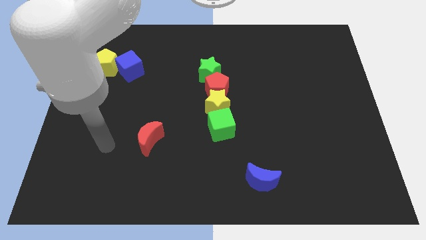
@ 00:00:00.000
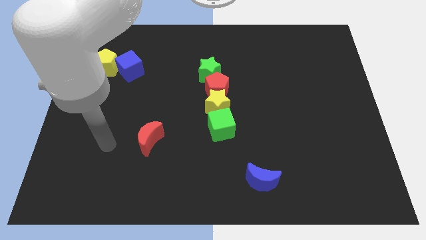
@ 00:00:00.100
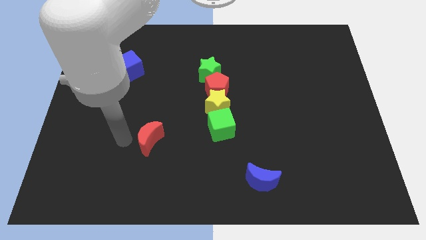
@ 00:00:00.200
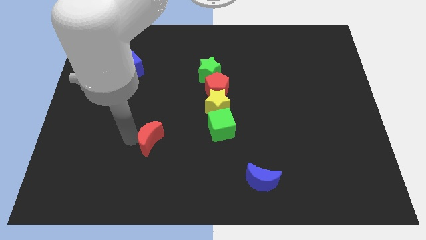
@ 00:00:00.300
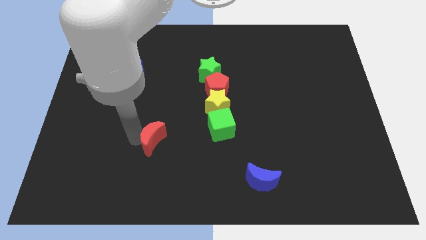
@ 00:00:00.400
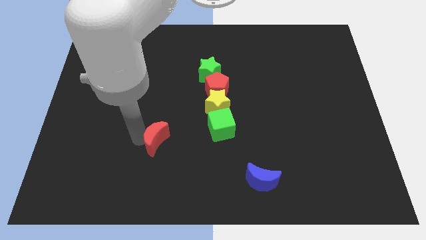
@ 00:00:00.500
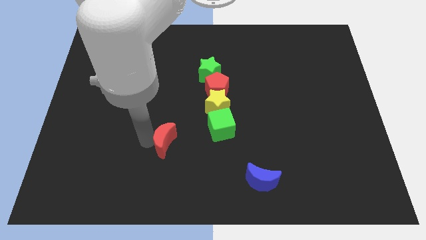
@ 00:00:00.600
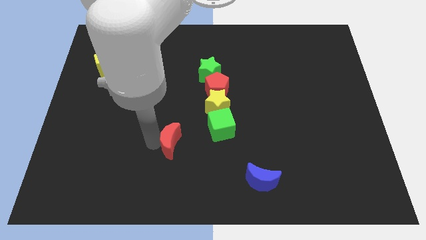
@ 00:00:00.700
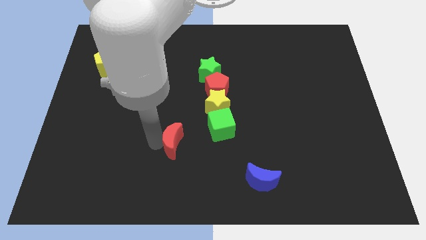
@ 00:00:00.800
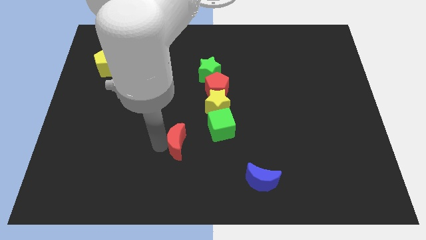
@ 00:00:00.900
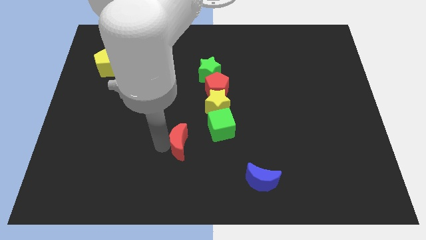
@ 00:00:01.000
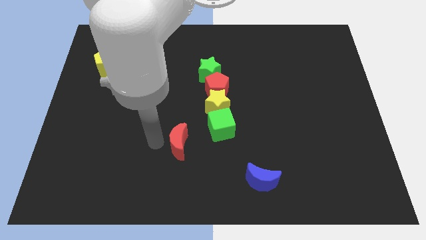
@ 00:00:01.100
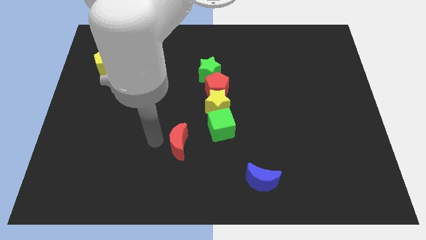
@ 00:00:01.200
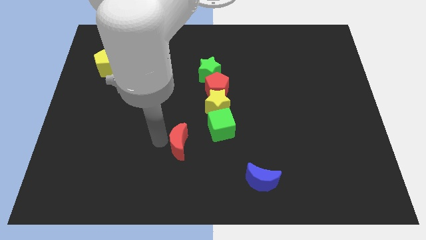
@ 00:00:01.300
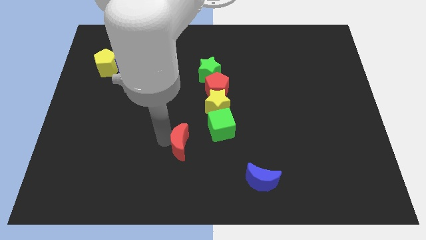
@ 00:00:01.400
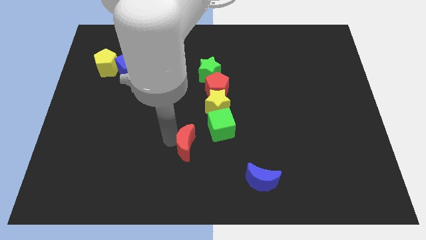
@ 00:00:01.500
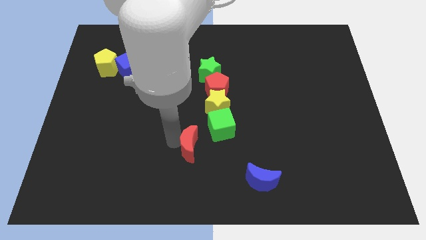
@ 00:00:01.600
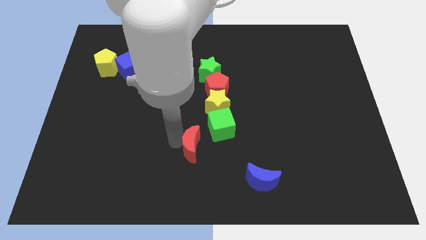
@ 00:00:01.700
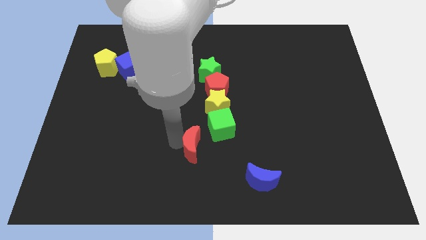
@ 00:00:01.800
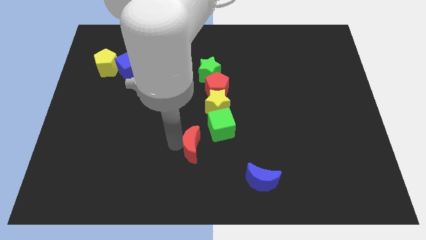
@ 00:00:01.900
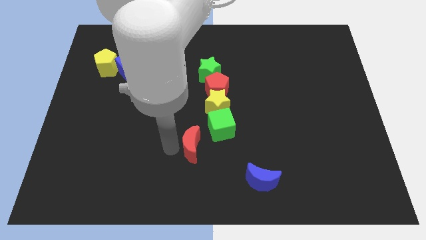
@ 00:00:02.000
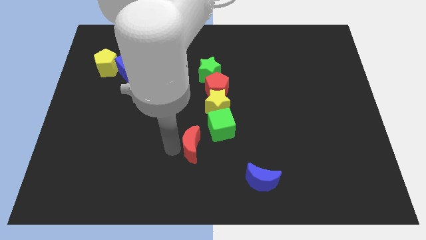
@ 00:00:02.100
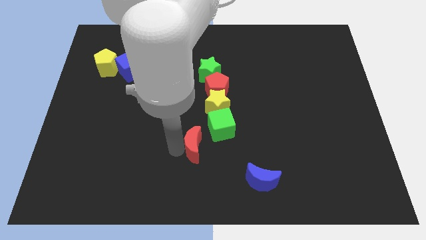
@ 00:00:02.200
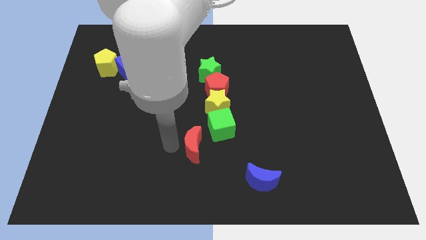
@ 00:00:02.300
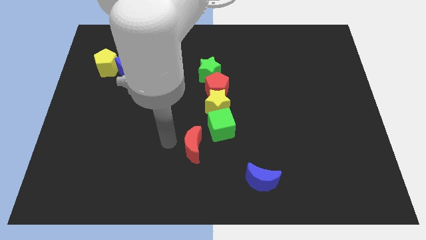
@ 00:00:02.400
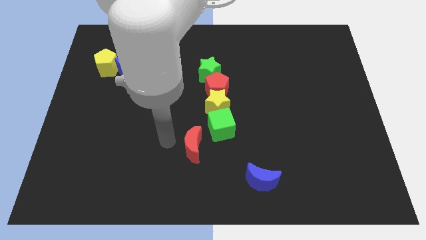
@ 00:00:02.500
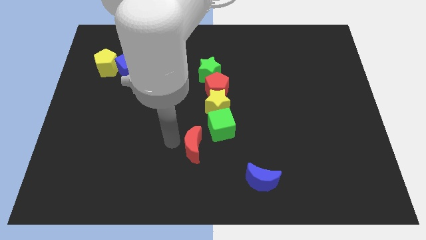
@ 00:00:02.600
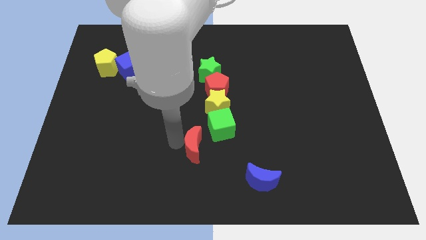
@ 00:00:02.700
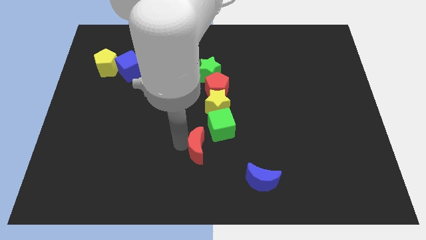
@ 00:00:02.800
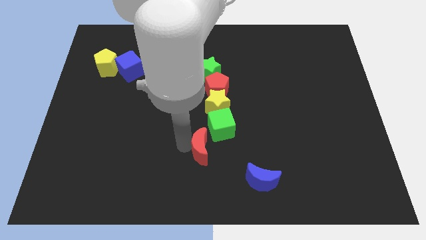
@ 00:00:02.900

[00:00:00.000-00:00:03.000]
move the red crescent to the left of green cube

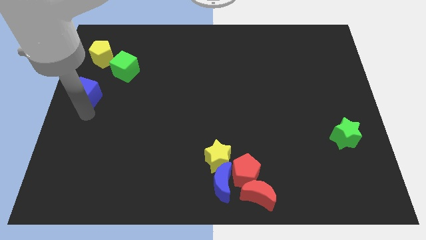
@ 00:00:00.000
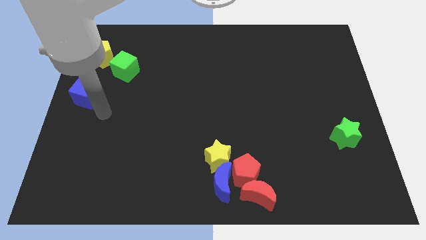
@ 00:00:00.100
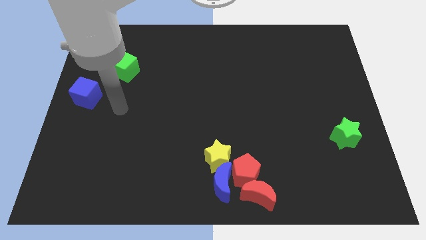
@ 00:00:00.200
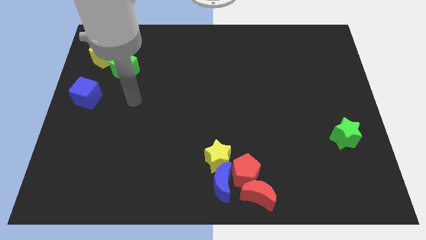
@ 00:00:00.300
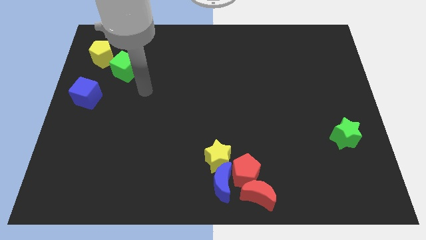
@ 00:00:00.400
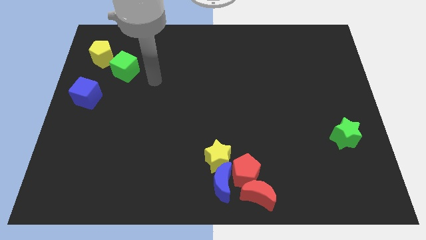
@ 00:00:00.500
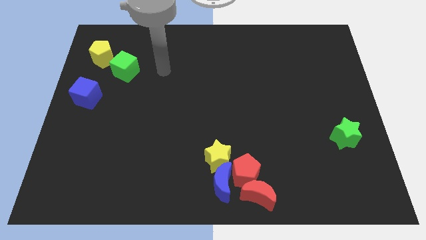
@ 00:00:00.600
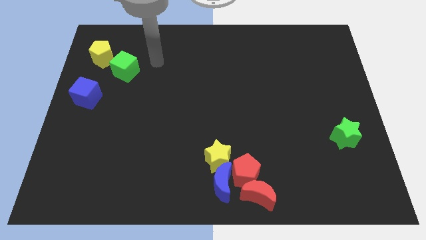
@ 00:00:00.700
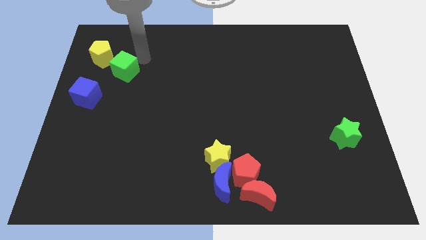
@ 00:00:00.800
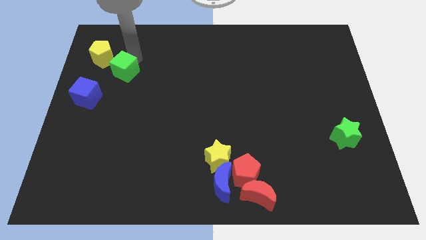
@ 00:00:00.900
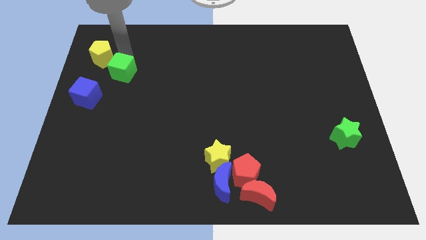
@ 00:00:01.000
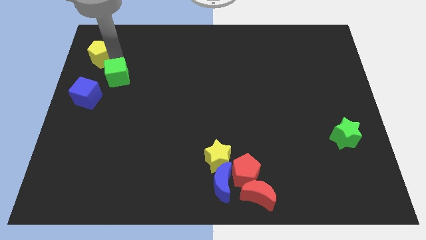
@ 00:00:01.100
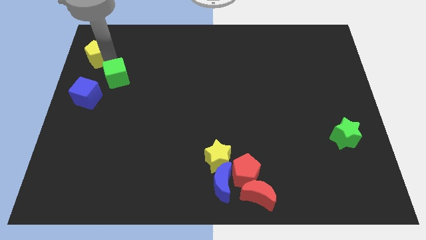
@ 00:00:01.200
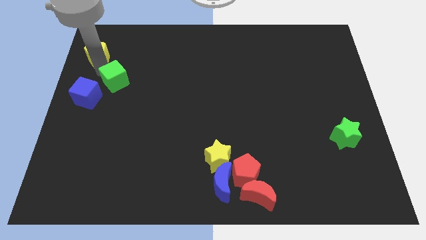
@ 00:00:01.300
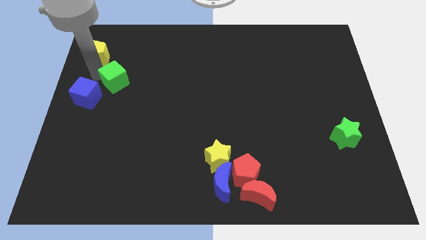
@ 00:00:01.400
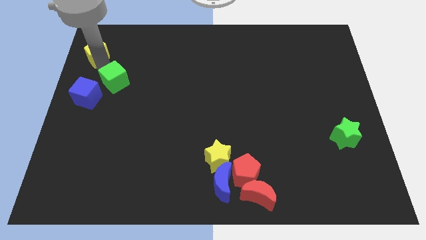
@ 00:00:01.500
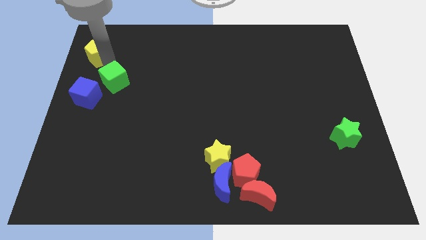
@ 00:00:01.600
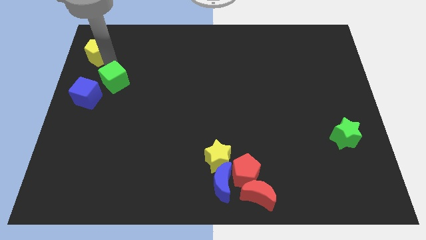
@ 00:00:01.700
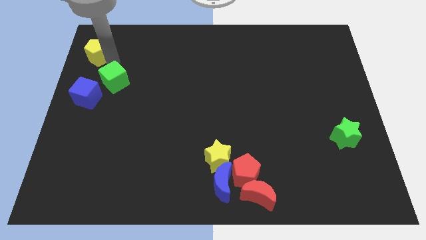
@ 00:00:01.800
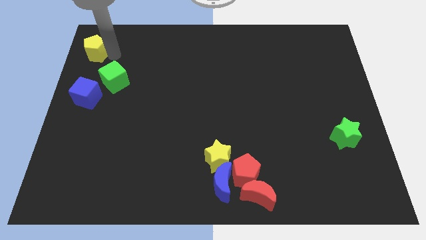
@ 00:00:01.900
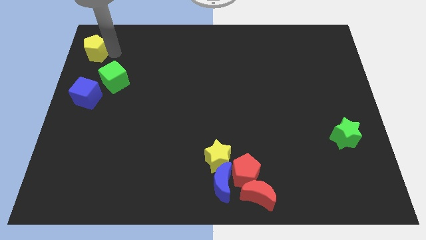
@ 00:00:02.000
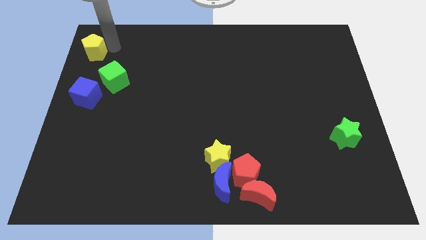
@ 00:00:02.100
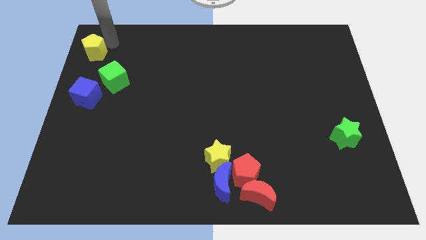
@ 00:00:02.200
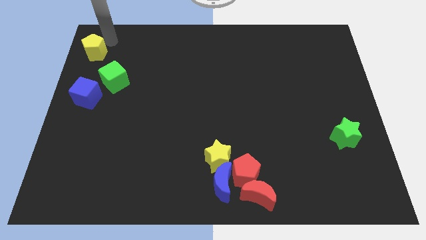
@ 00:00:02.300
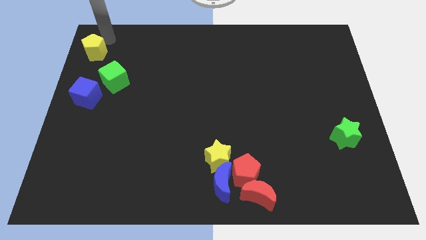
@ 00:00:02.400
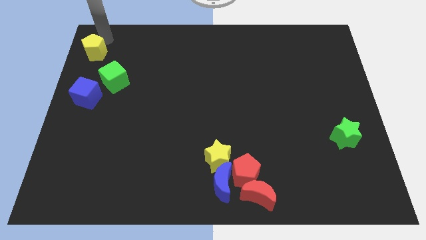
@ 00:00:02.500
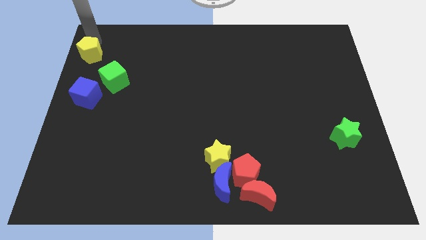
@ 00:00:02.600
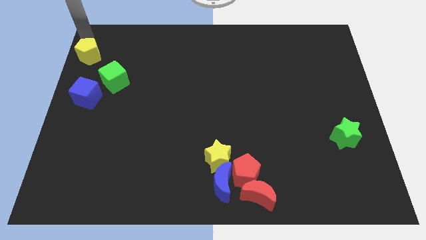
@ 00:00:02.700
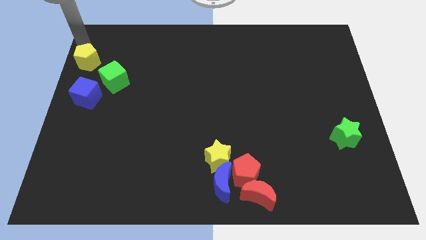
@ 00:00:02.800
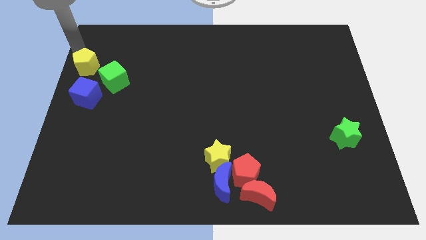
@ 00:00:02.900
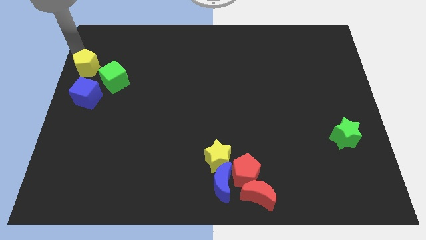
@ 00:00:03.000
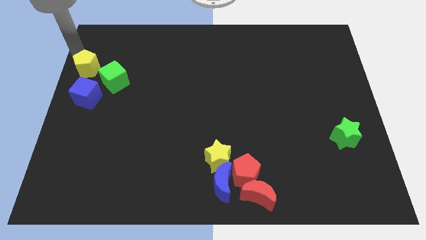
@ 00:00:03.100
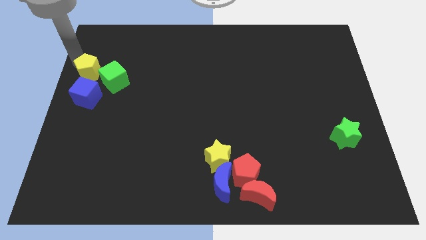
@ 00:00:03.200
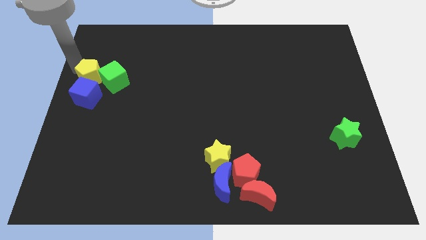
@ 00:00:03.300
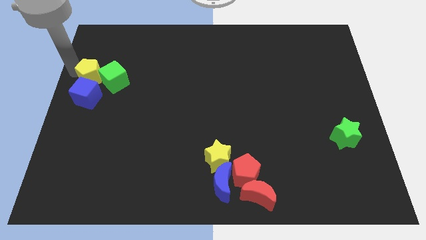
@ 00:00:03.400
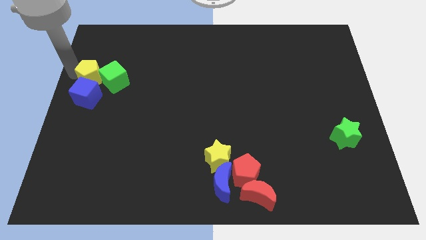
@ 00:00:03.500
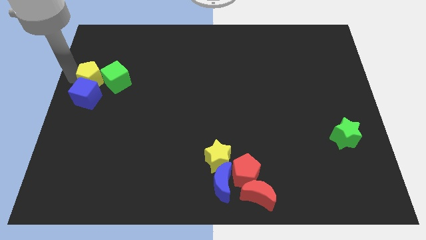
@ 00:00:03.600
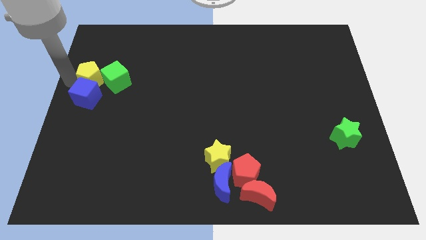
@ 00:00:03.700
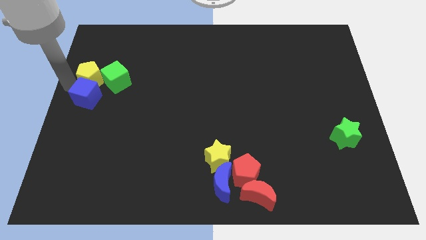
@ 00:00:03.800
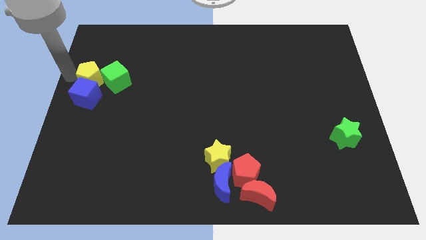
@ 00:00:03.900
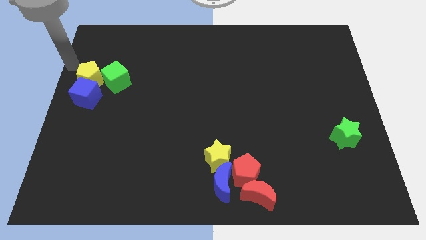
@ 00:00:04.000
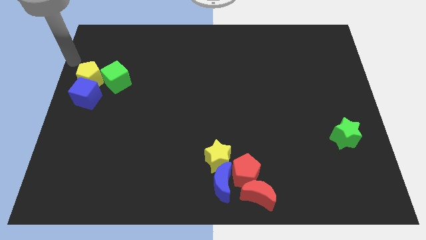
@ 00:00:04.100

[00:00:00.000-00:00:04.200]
push the yellow pentagon into blue cube

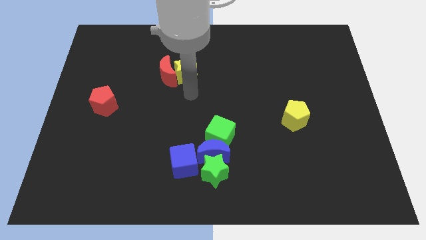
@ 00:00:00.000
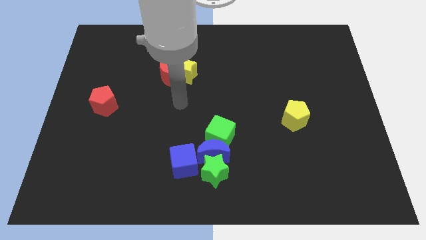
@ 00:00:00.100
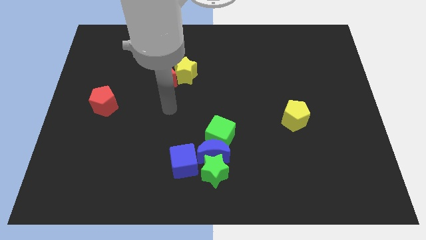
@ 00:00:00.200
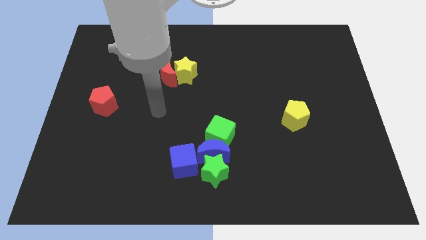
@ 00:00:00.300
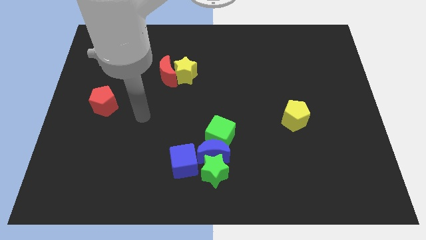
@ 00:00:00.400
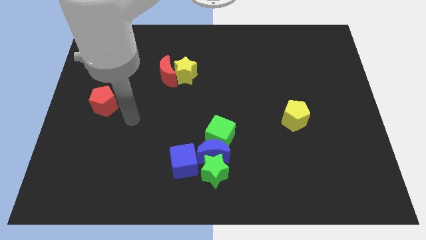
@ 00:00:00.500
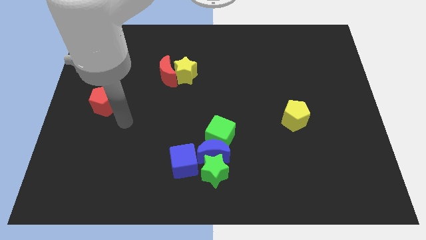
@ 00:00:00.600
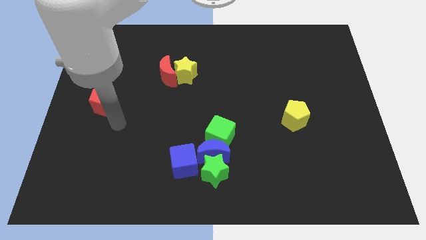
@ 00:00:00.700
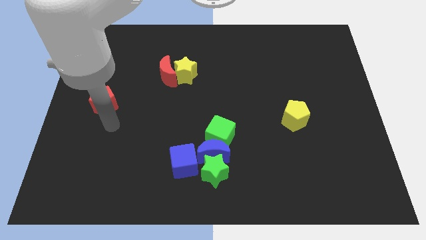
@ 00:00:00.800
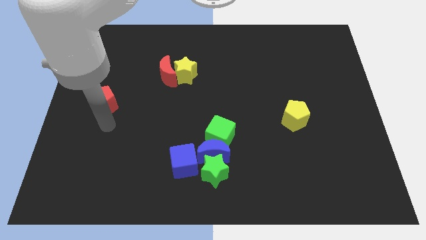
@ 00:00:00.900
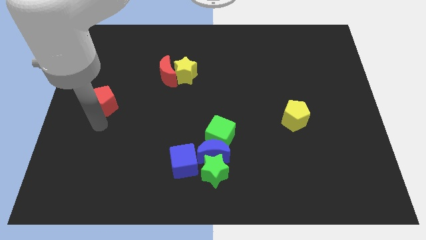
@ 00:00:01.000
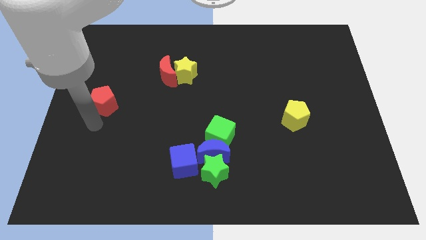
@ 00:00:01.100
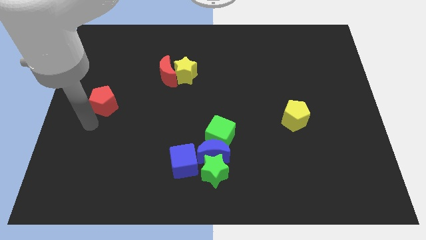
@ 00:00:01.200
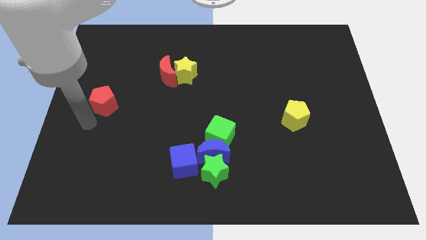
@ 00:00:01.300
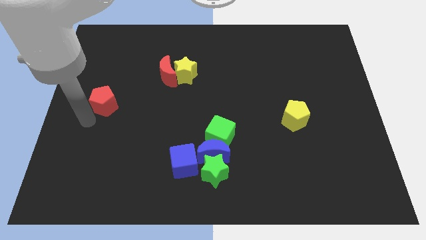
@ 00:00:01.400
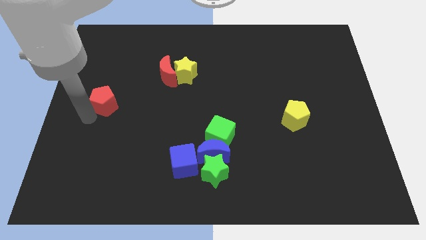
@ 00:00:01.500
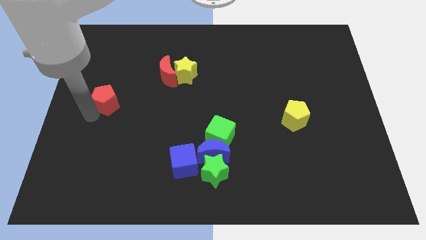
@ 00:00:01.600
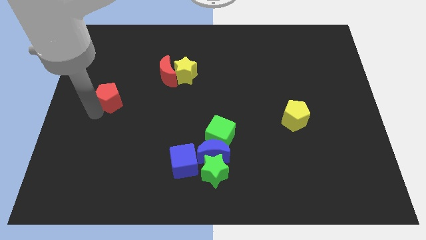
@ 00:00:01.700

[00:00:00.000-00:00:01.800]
move the arm towards the red pentagon
